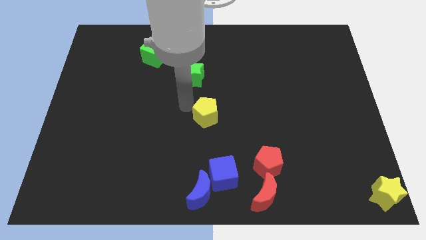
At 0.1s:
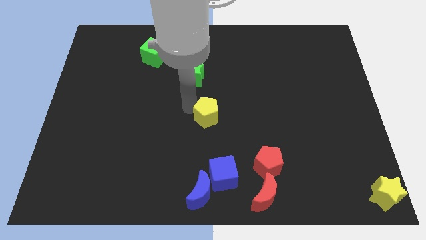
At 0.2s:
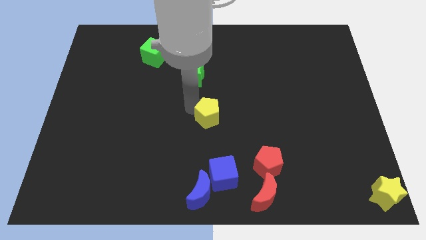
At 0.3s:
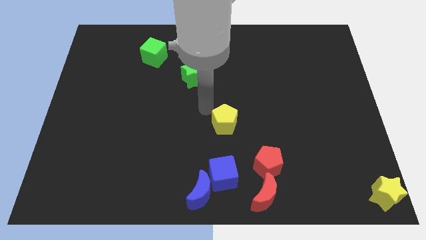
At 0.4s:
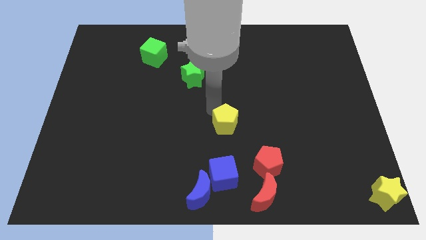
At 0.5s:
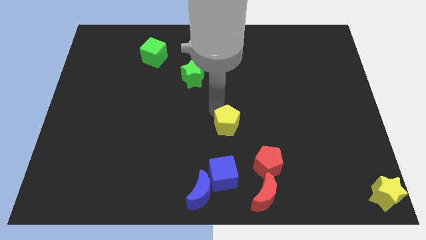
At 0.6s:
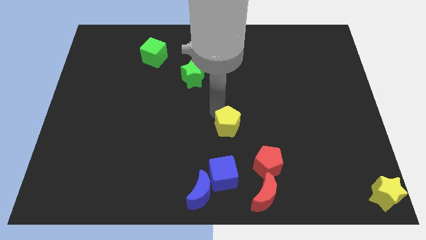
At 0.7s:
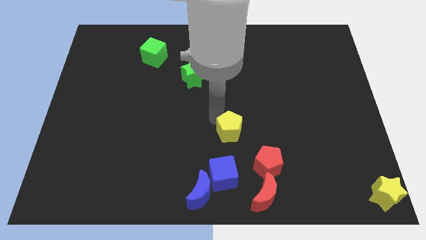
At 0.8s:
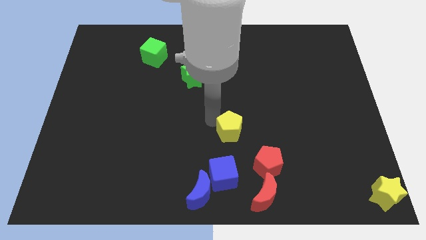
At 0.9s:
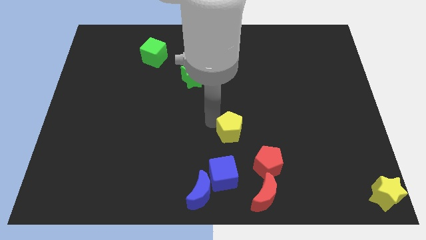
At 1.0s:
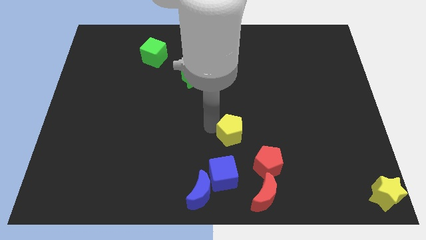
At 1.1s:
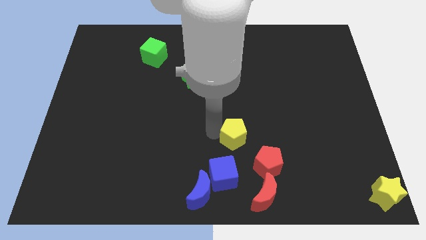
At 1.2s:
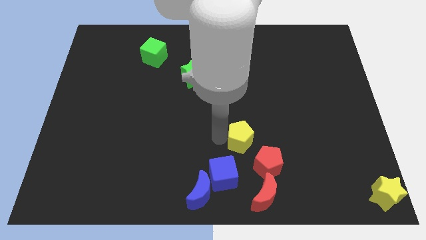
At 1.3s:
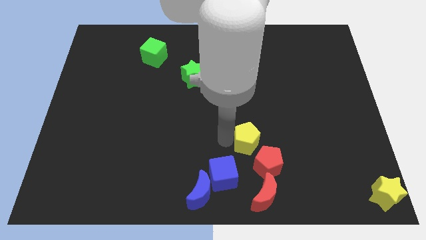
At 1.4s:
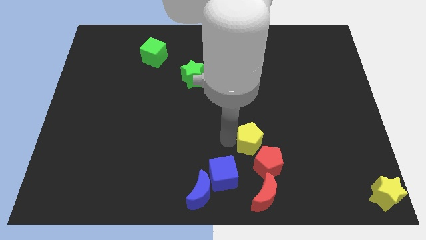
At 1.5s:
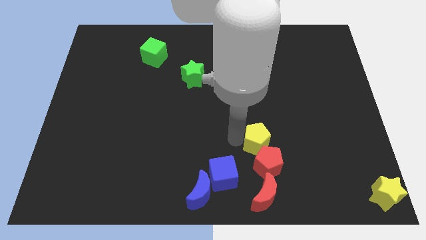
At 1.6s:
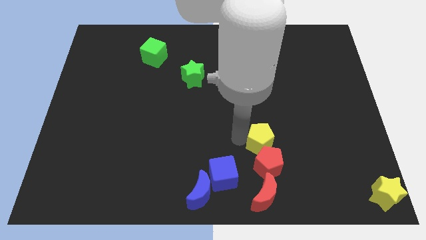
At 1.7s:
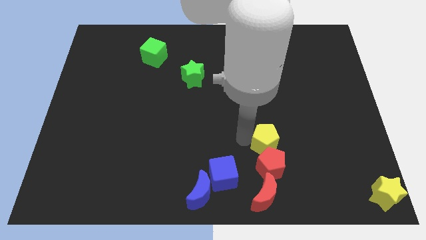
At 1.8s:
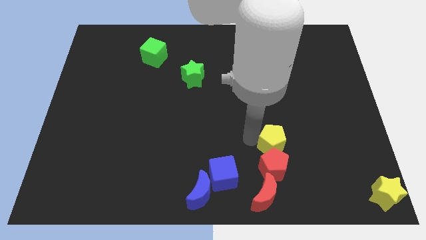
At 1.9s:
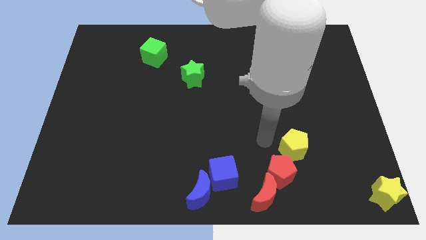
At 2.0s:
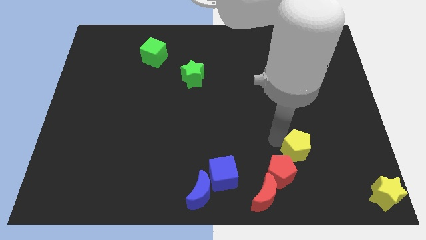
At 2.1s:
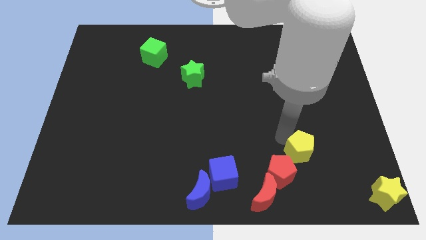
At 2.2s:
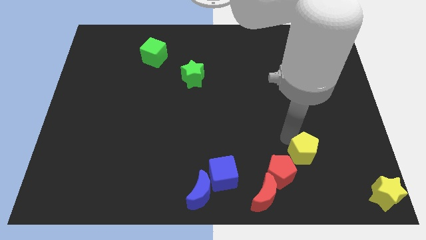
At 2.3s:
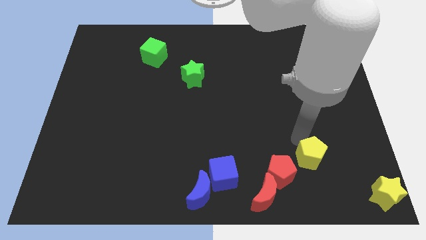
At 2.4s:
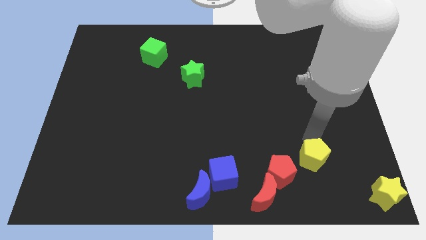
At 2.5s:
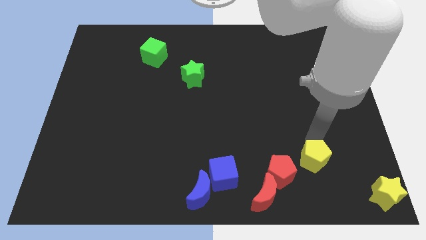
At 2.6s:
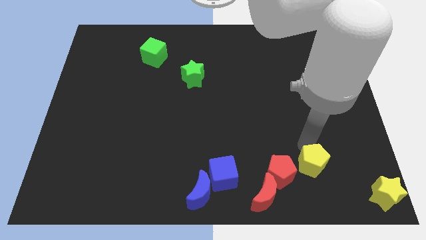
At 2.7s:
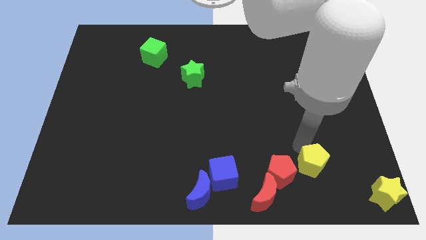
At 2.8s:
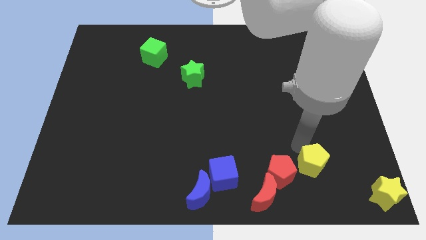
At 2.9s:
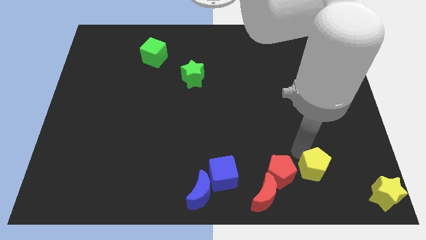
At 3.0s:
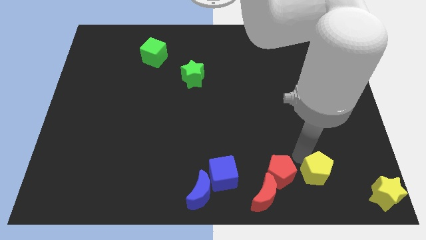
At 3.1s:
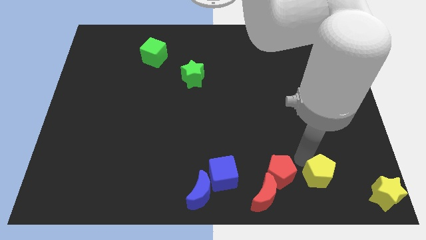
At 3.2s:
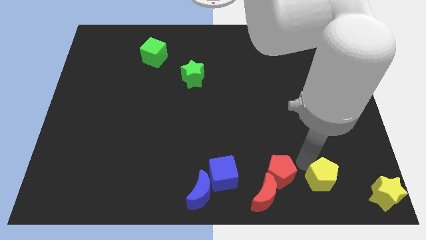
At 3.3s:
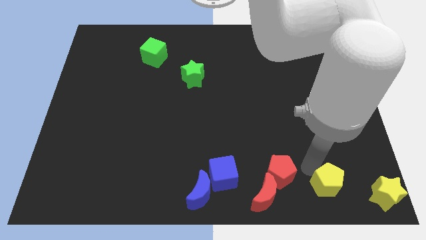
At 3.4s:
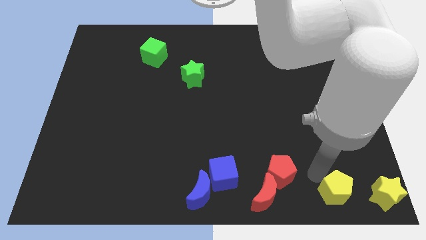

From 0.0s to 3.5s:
place the yellow pentagon in between red pentagon and yellow star

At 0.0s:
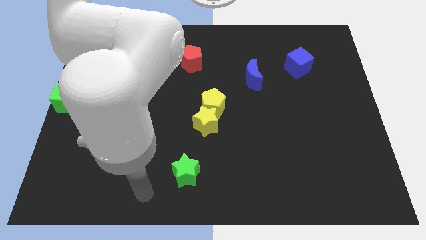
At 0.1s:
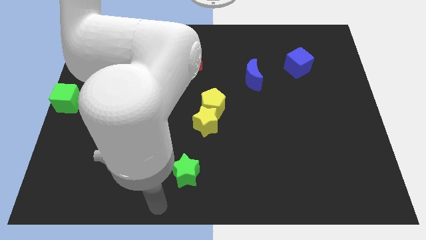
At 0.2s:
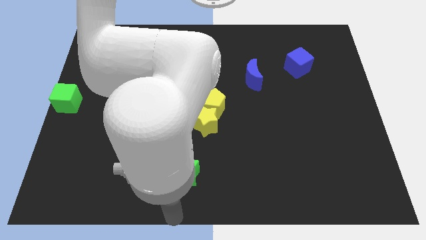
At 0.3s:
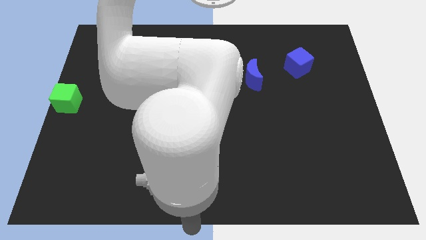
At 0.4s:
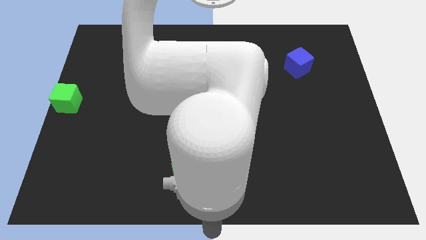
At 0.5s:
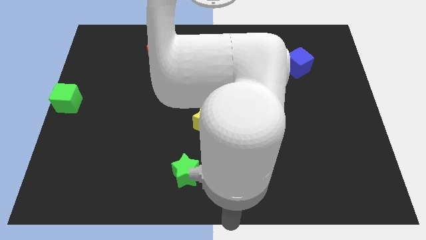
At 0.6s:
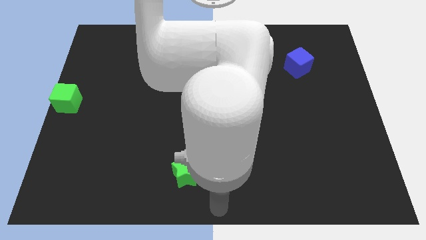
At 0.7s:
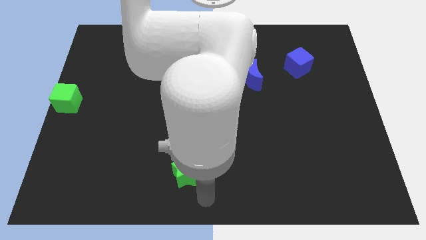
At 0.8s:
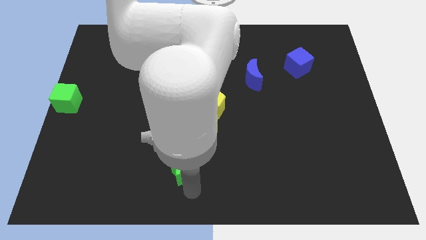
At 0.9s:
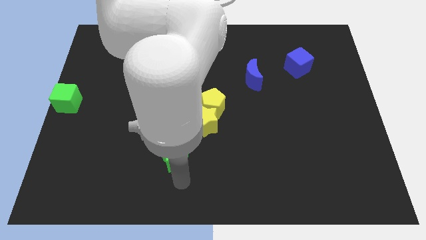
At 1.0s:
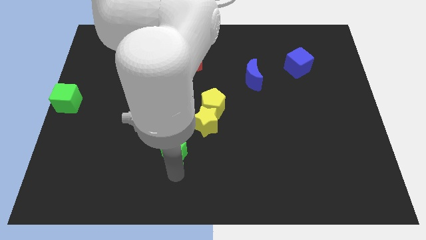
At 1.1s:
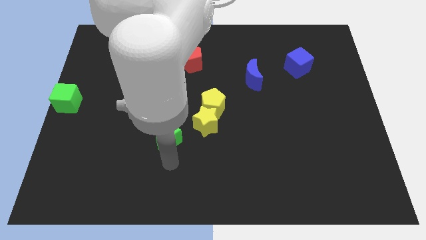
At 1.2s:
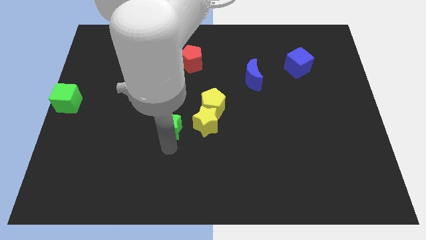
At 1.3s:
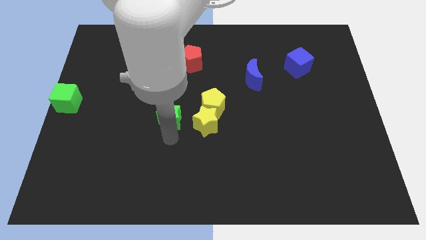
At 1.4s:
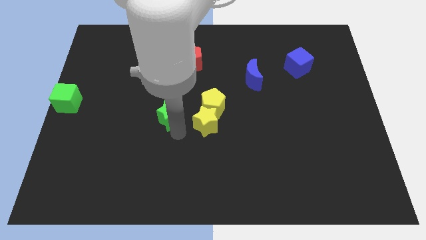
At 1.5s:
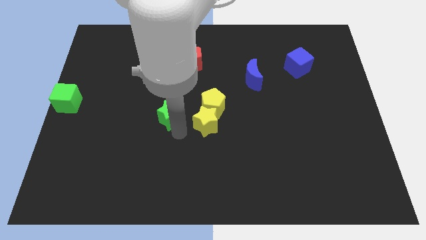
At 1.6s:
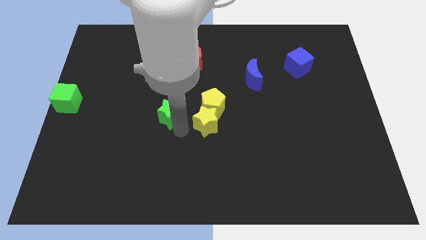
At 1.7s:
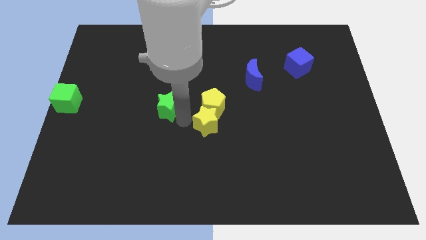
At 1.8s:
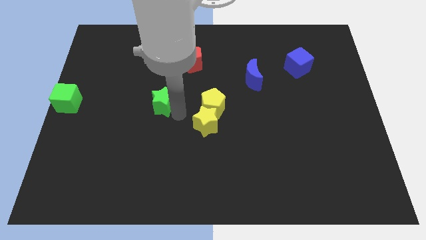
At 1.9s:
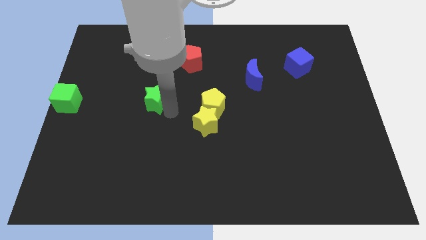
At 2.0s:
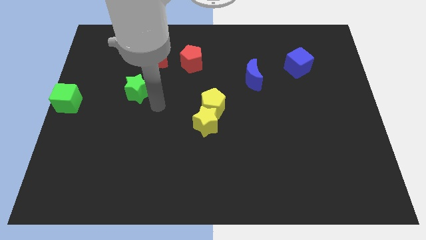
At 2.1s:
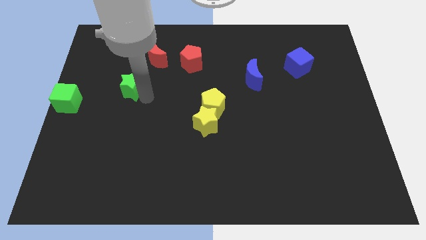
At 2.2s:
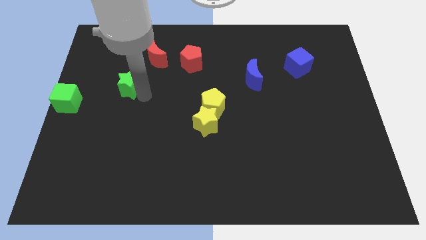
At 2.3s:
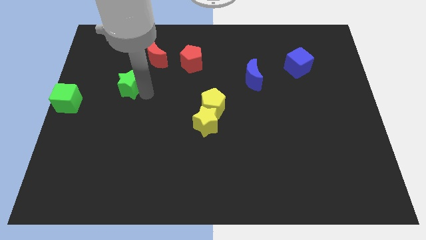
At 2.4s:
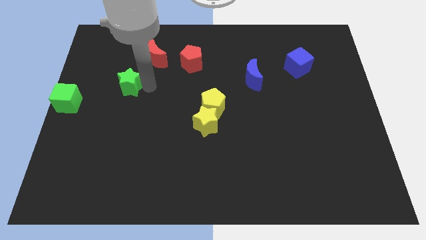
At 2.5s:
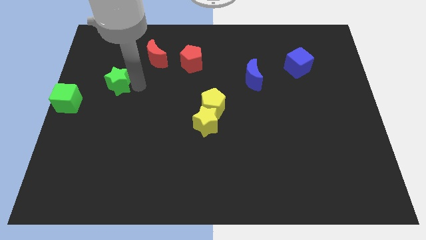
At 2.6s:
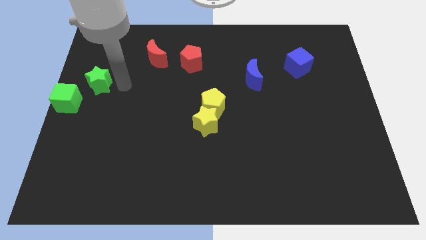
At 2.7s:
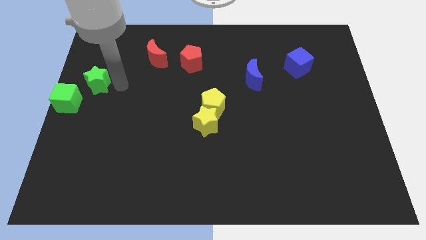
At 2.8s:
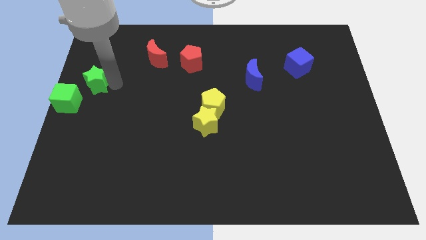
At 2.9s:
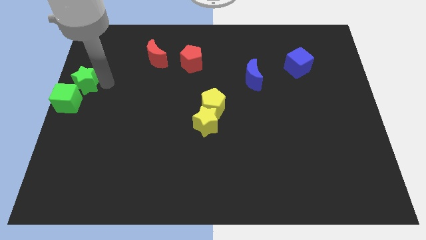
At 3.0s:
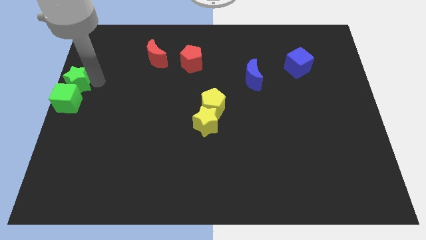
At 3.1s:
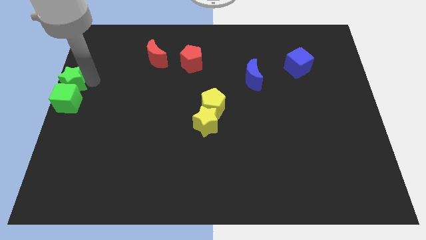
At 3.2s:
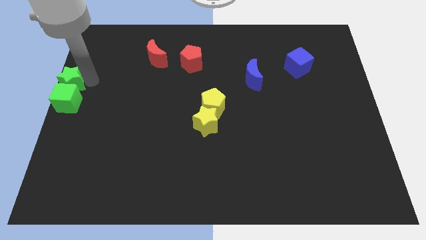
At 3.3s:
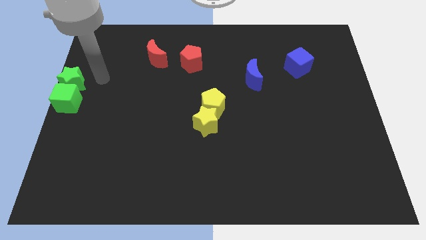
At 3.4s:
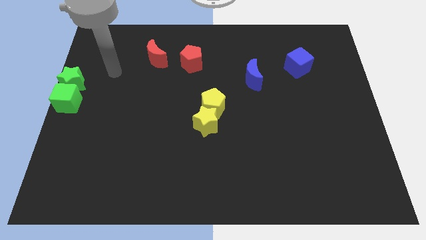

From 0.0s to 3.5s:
move green star above the green cube

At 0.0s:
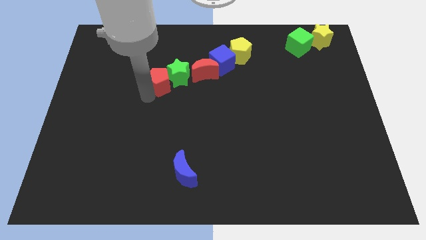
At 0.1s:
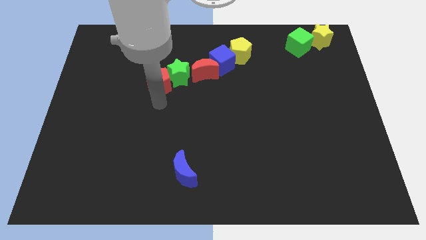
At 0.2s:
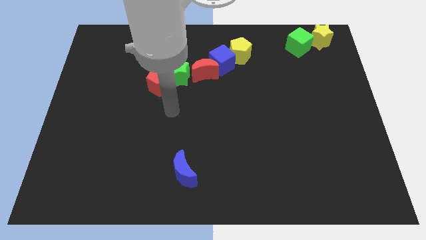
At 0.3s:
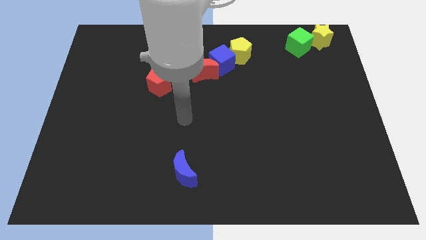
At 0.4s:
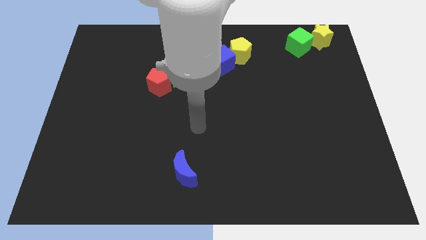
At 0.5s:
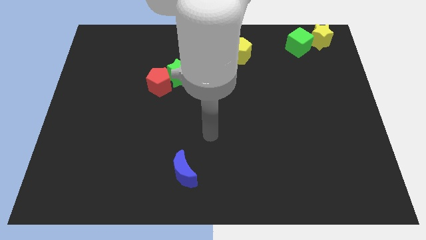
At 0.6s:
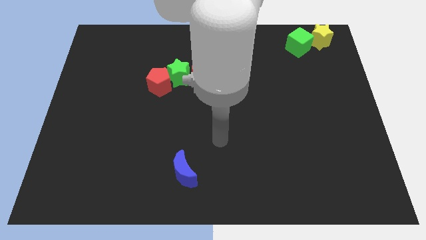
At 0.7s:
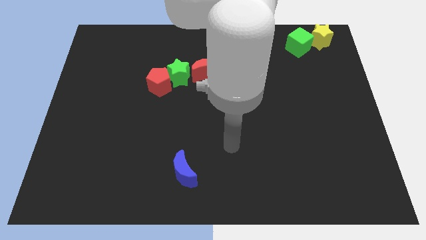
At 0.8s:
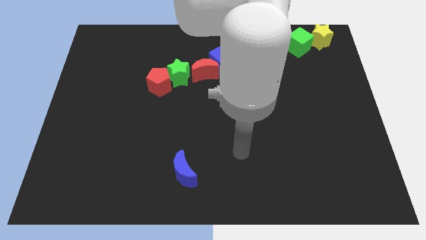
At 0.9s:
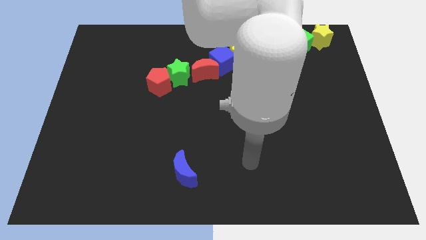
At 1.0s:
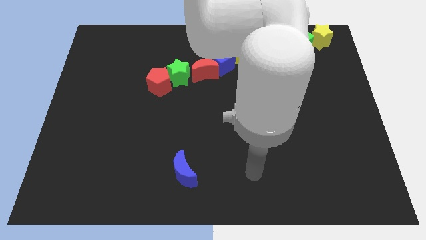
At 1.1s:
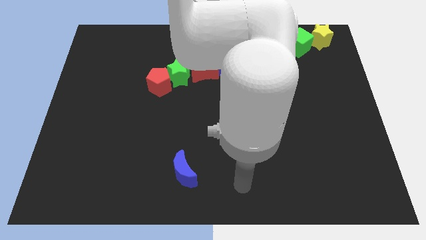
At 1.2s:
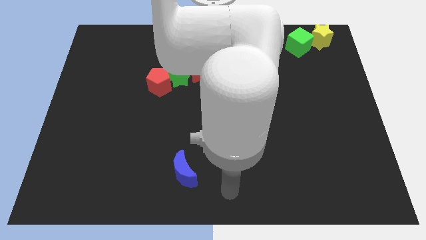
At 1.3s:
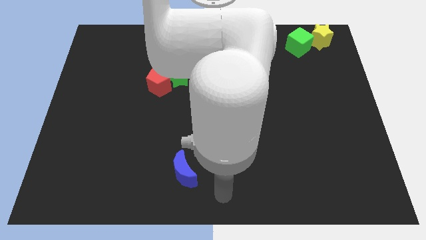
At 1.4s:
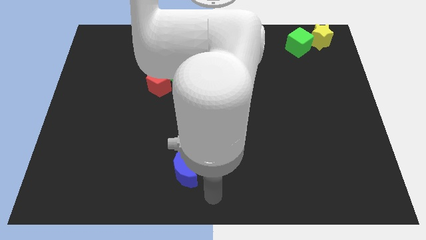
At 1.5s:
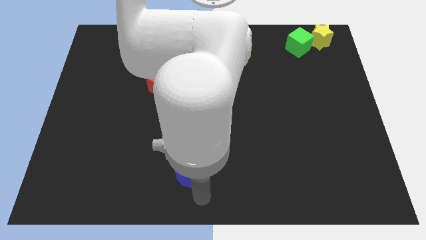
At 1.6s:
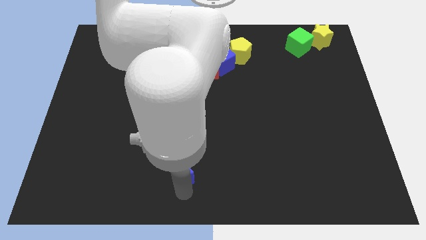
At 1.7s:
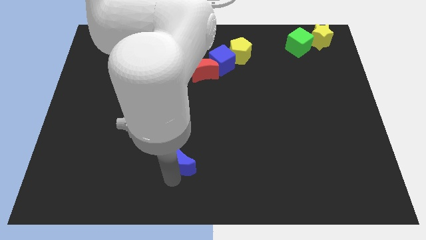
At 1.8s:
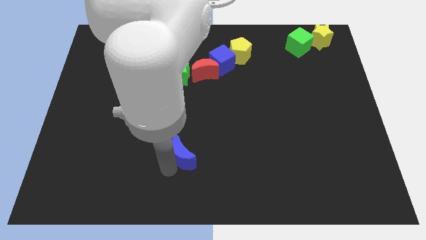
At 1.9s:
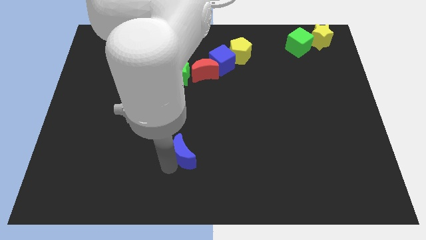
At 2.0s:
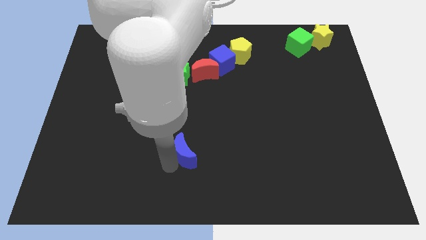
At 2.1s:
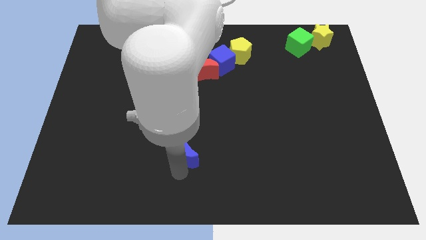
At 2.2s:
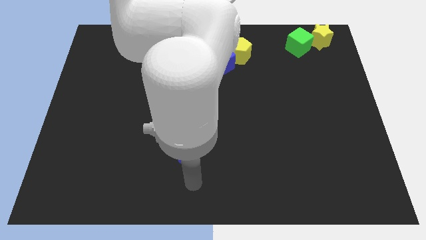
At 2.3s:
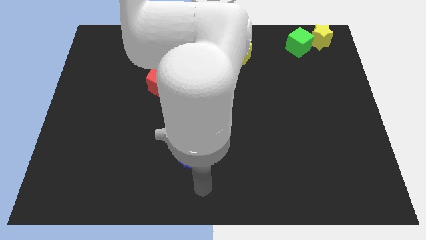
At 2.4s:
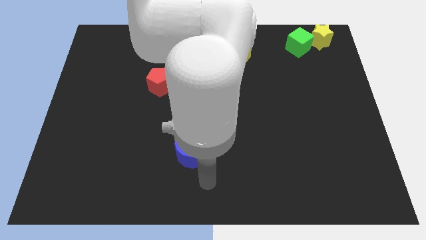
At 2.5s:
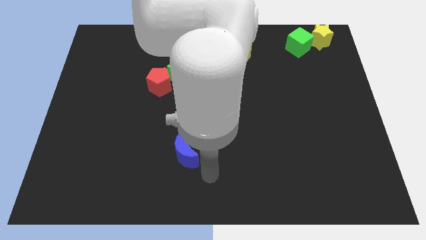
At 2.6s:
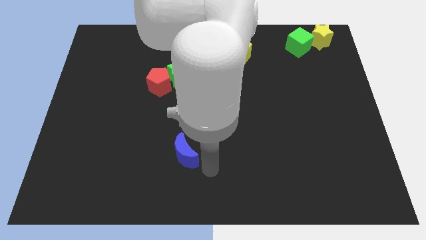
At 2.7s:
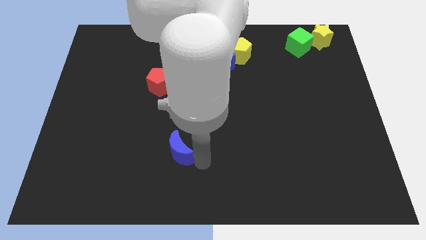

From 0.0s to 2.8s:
move the blue crescent slightly to the top
